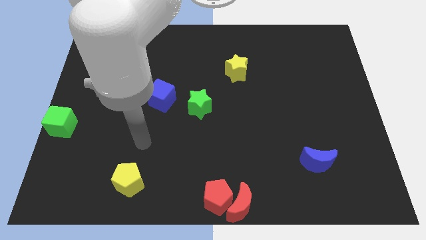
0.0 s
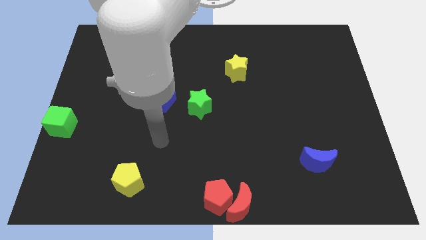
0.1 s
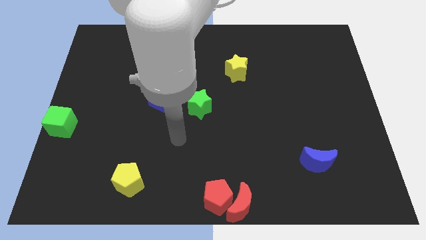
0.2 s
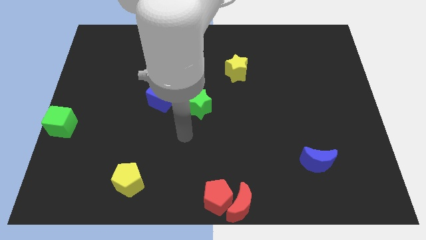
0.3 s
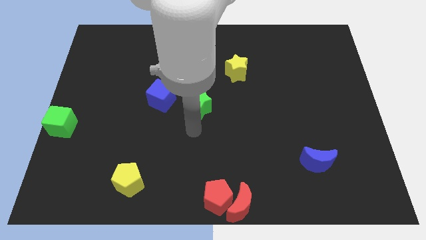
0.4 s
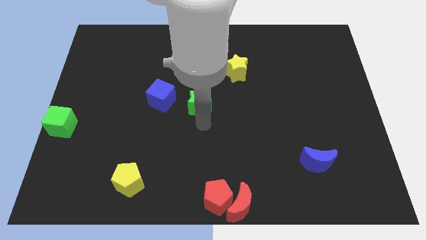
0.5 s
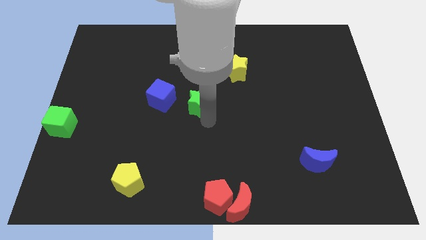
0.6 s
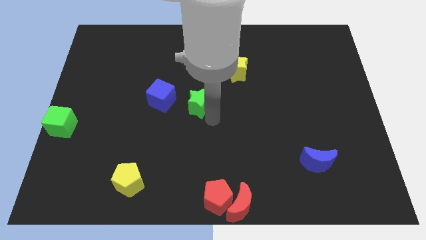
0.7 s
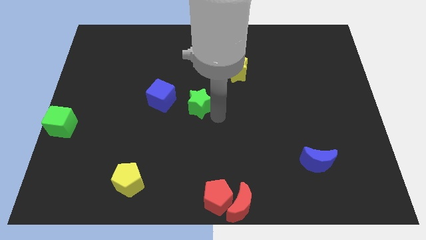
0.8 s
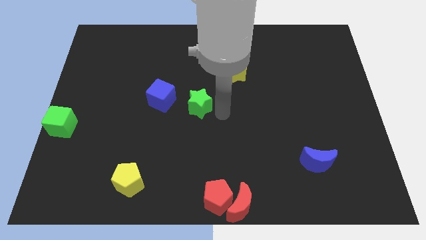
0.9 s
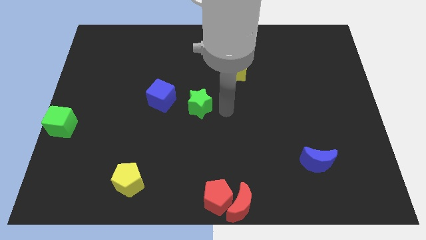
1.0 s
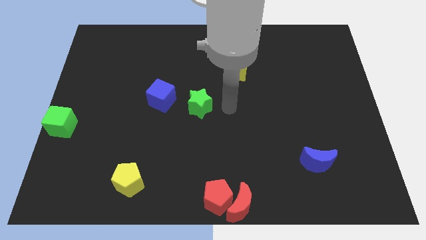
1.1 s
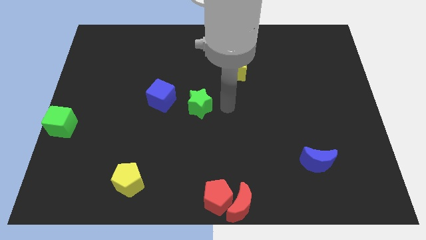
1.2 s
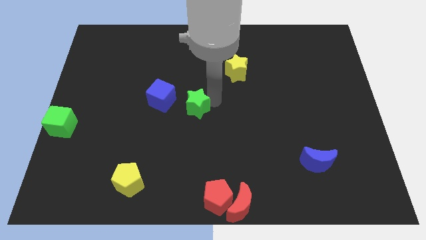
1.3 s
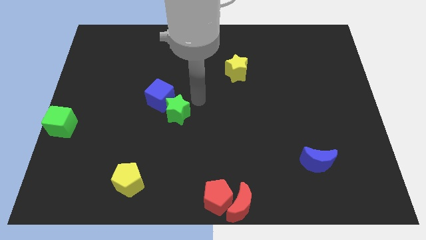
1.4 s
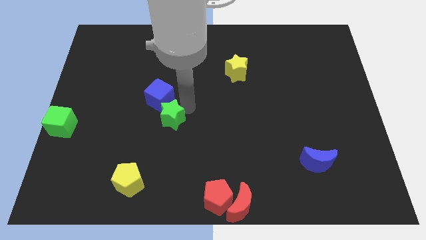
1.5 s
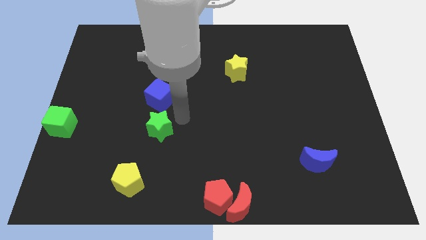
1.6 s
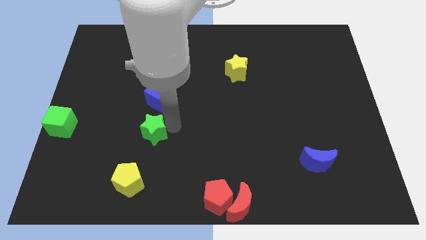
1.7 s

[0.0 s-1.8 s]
push the green star horizontally to the right of the green cube

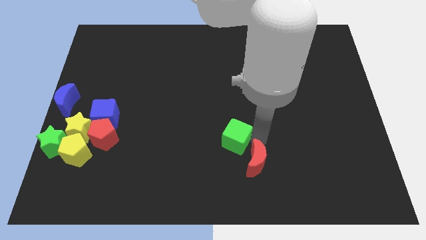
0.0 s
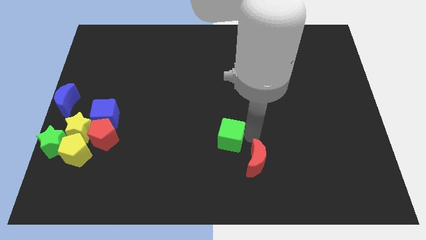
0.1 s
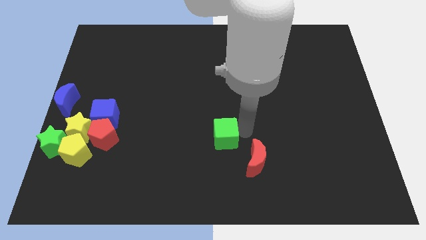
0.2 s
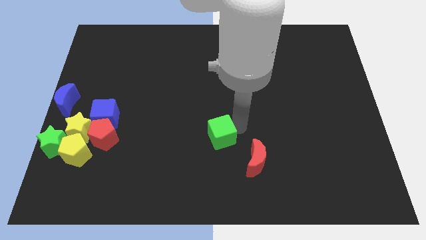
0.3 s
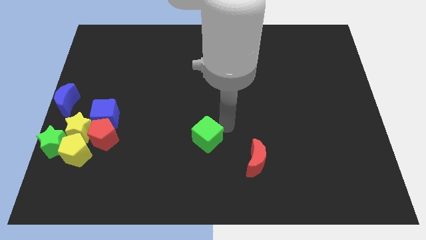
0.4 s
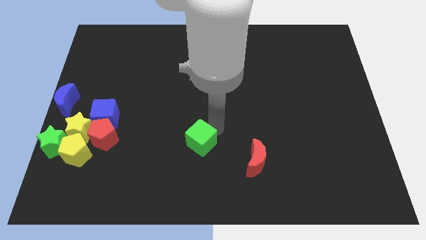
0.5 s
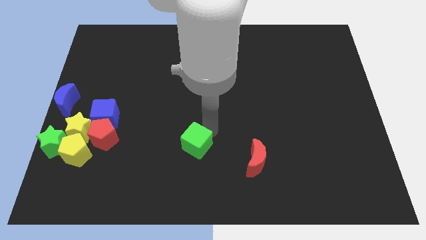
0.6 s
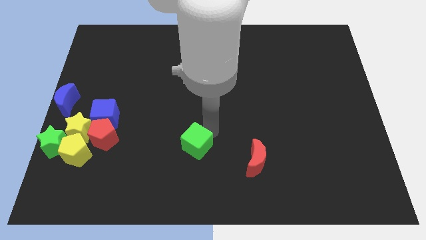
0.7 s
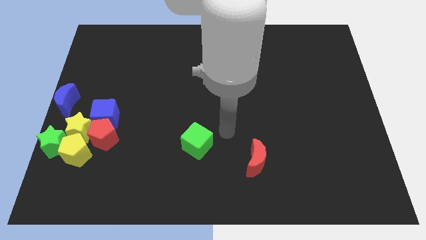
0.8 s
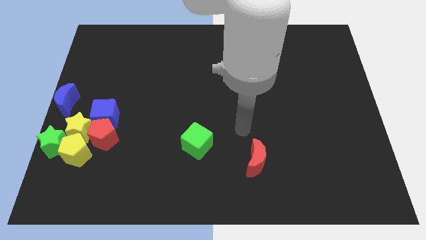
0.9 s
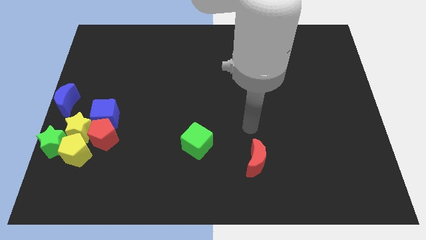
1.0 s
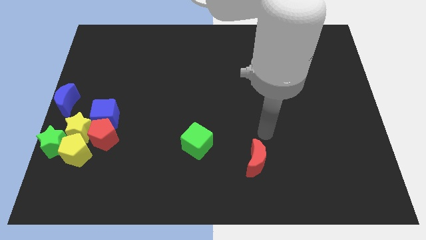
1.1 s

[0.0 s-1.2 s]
push the green cube away from the red pentagon

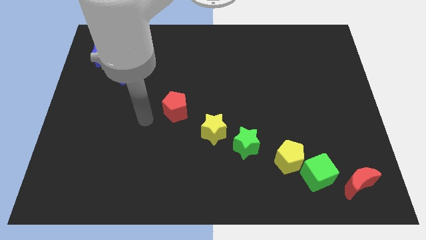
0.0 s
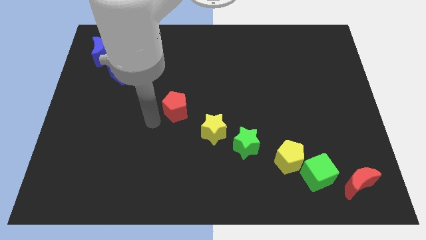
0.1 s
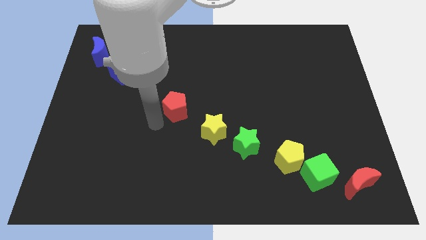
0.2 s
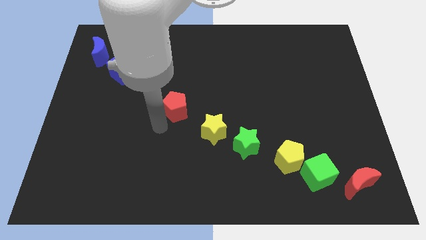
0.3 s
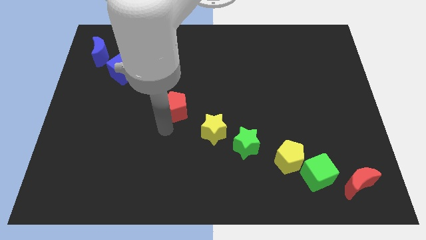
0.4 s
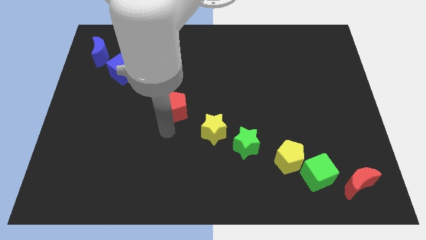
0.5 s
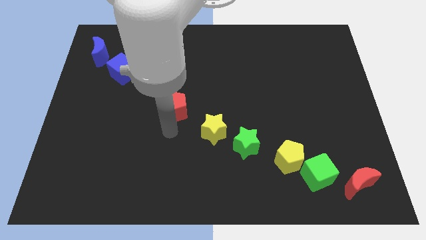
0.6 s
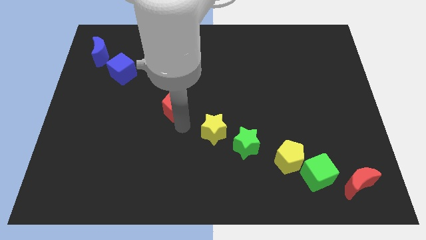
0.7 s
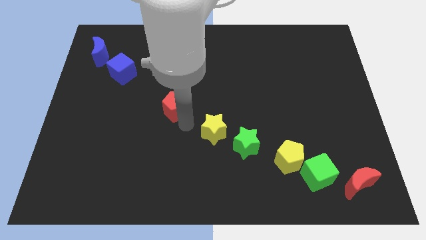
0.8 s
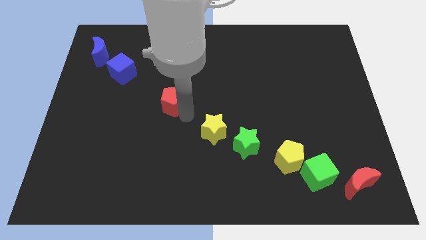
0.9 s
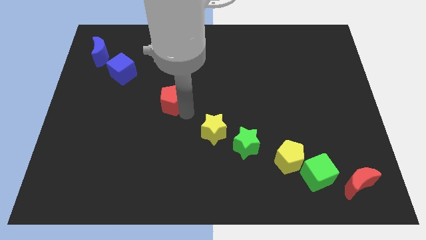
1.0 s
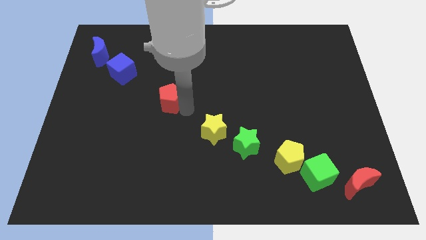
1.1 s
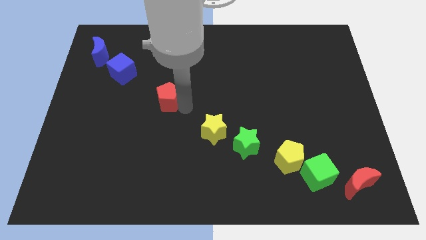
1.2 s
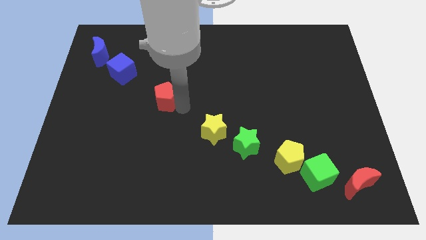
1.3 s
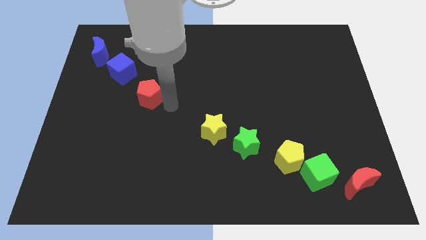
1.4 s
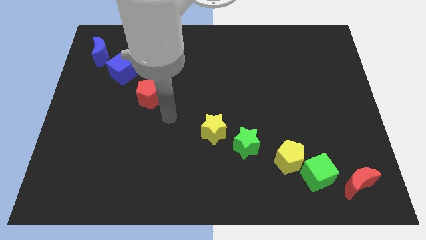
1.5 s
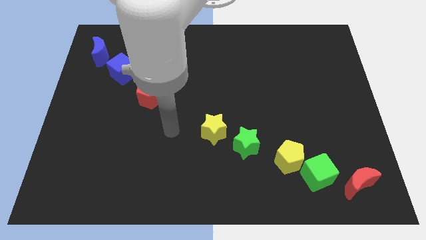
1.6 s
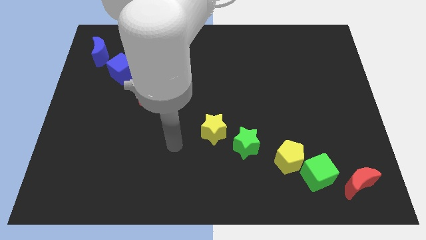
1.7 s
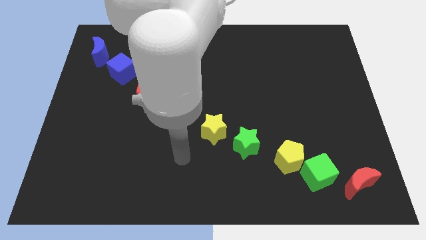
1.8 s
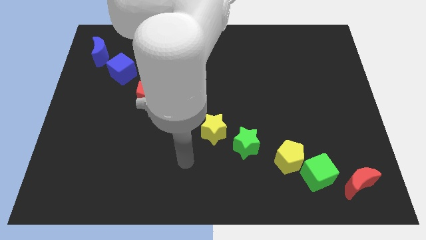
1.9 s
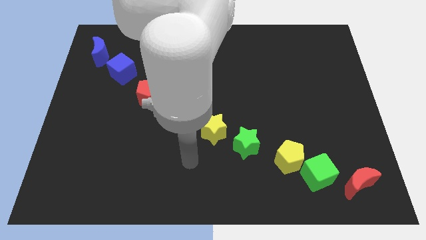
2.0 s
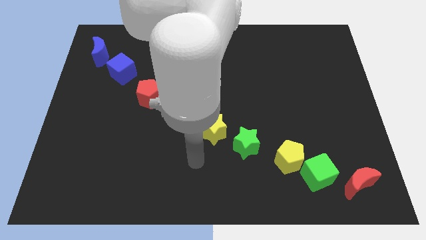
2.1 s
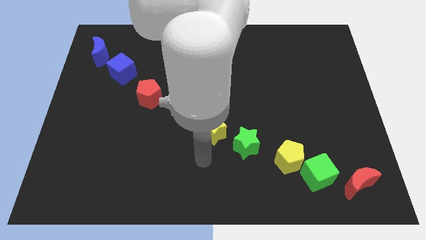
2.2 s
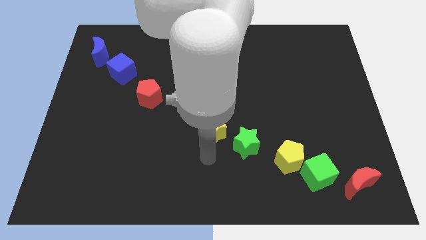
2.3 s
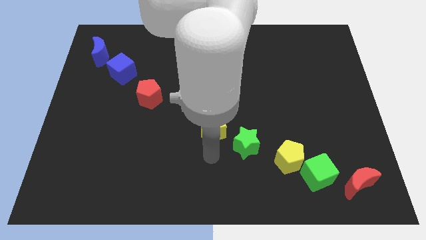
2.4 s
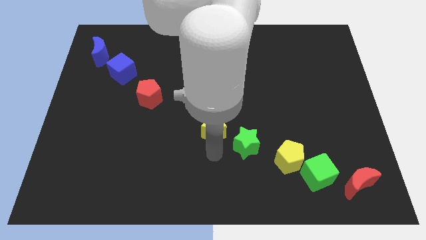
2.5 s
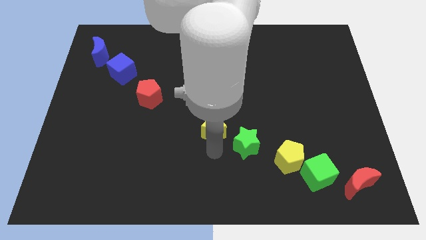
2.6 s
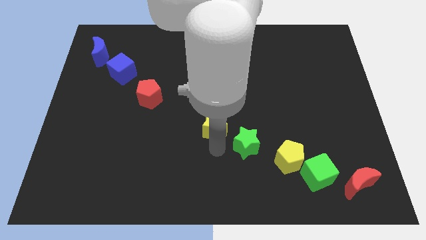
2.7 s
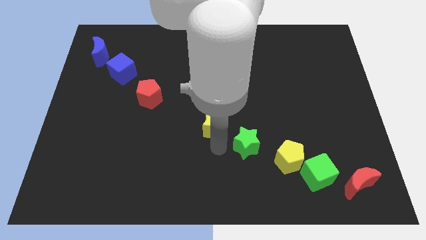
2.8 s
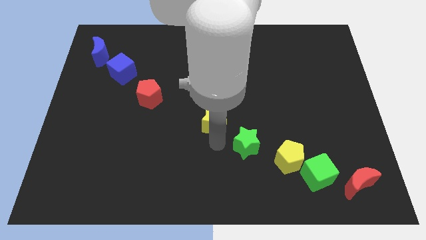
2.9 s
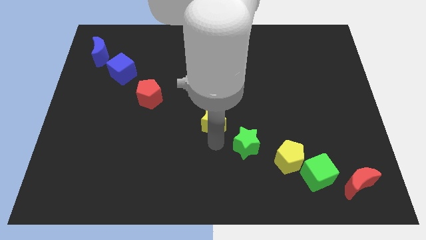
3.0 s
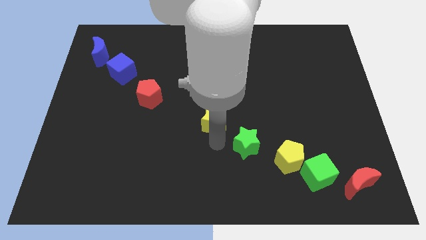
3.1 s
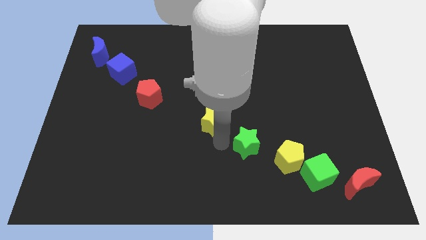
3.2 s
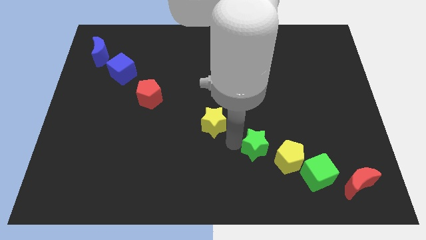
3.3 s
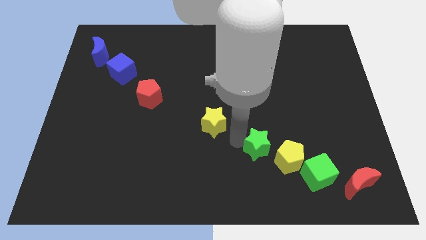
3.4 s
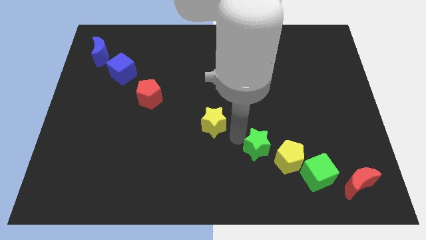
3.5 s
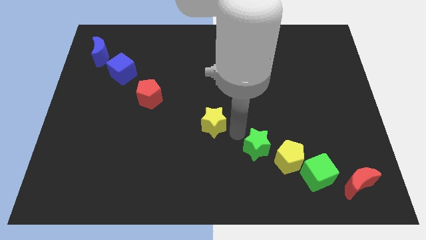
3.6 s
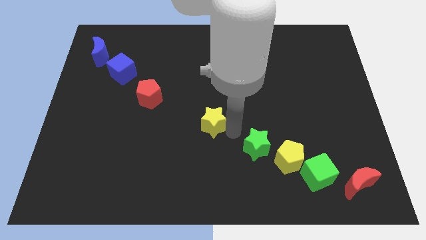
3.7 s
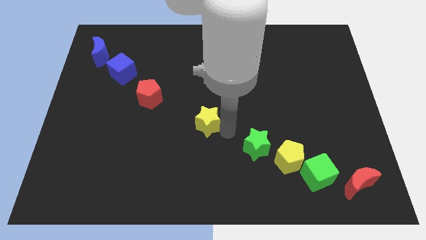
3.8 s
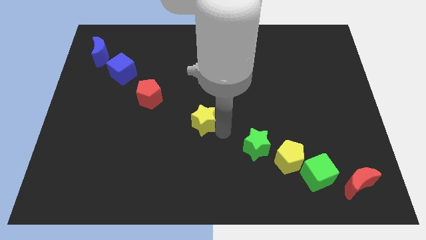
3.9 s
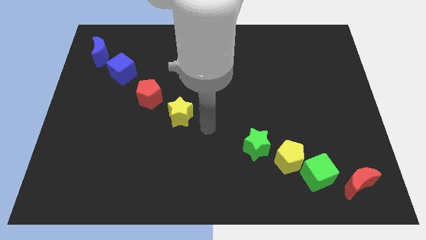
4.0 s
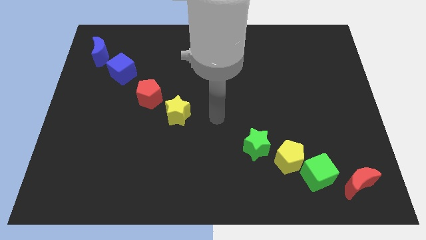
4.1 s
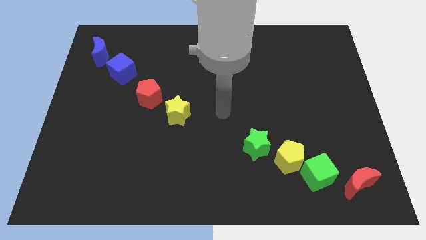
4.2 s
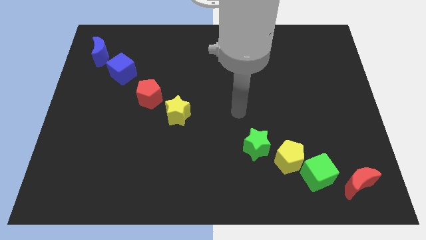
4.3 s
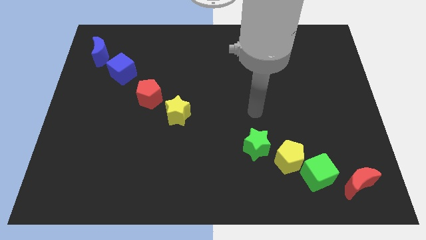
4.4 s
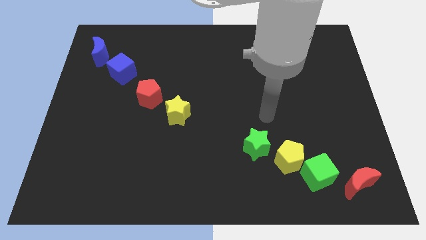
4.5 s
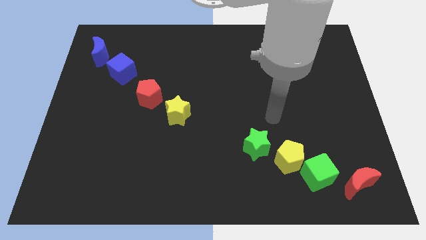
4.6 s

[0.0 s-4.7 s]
move the yellow star towards the red pentagon

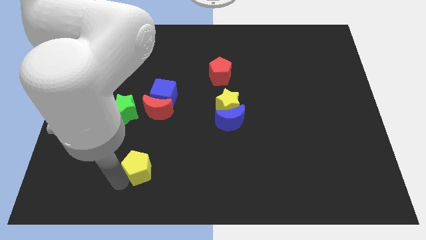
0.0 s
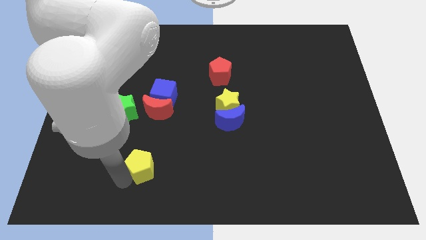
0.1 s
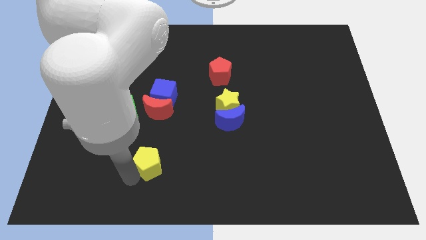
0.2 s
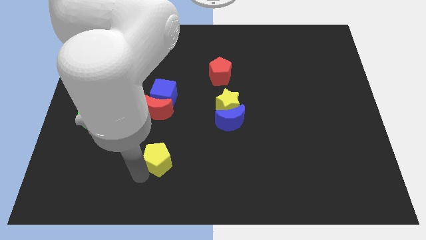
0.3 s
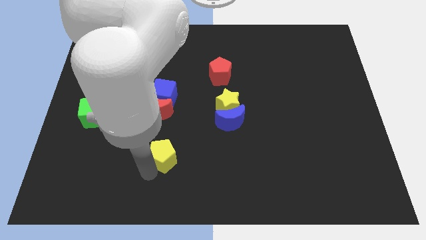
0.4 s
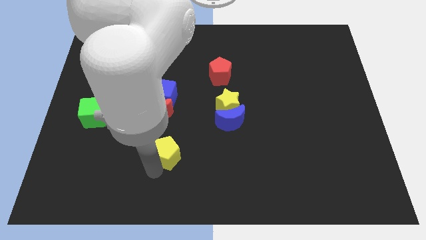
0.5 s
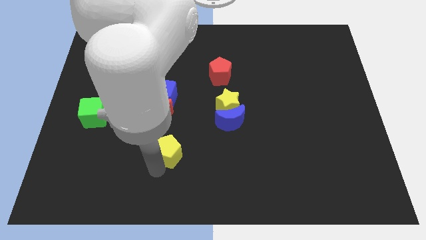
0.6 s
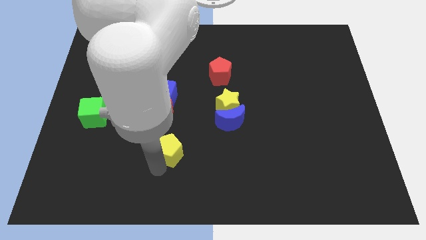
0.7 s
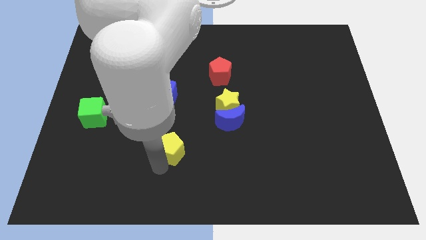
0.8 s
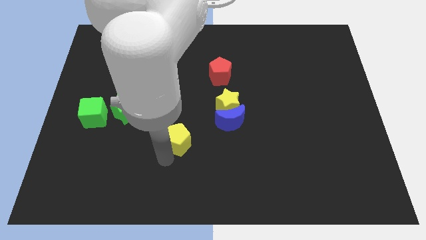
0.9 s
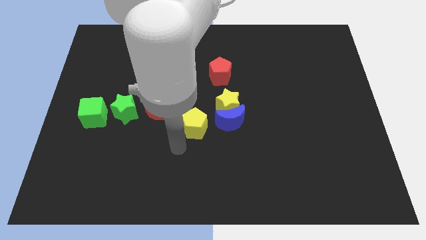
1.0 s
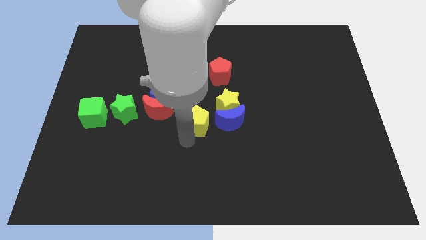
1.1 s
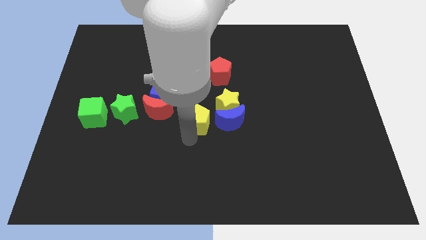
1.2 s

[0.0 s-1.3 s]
place the yellow pentagon left to the blue moon
